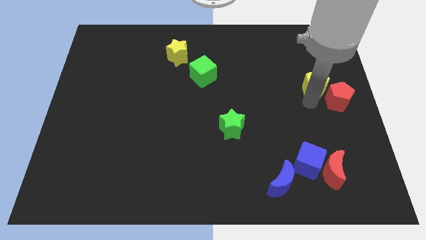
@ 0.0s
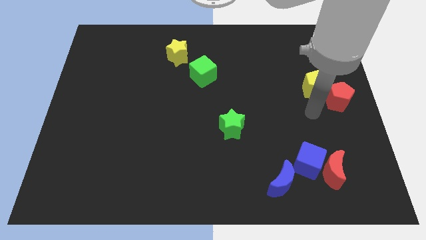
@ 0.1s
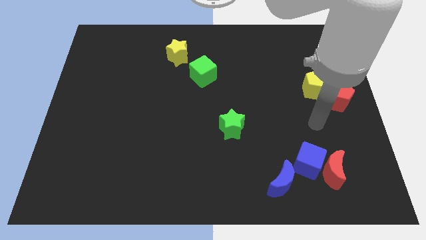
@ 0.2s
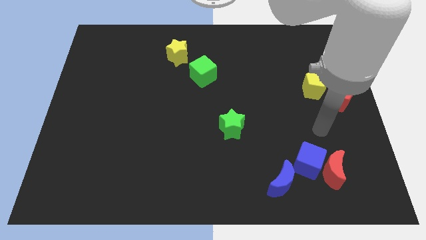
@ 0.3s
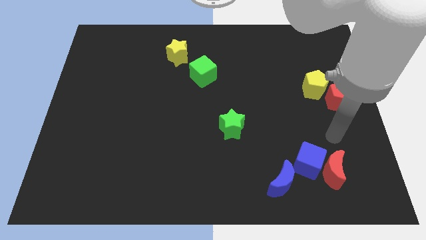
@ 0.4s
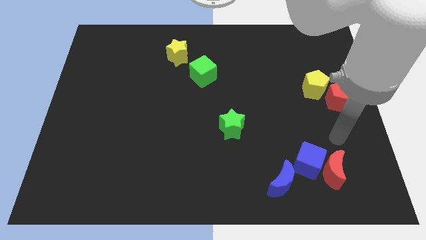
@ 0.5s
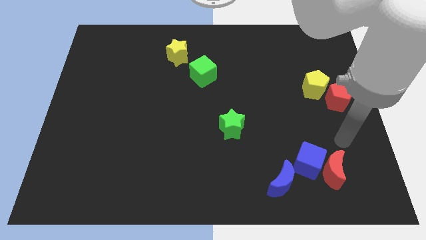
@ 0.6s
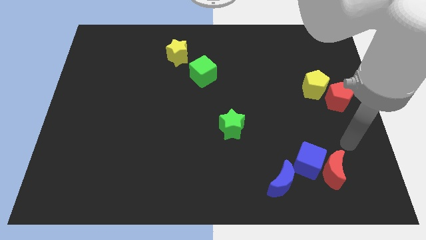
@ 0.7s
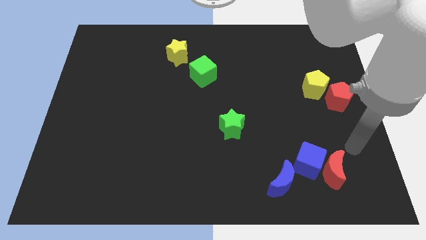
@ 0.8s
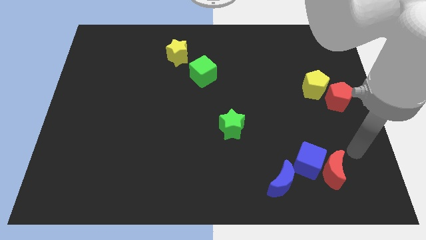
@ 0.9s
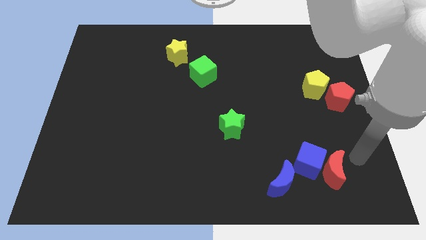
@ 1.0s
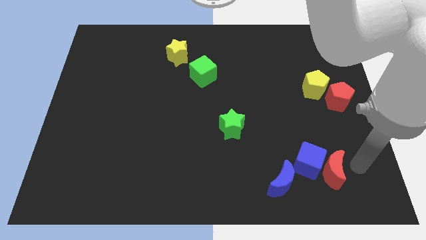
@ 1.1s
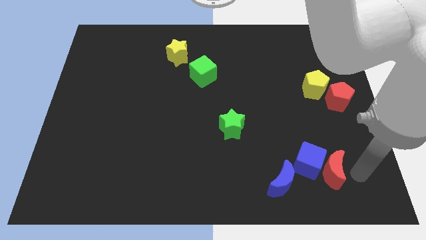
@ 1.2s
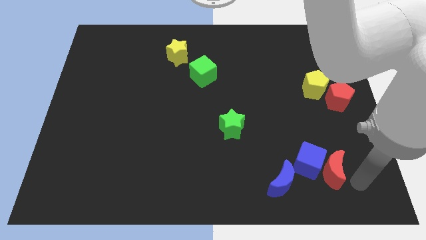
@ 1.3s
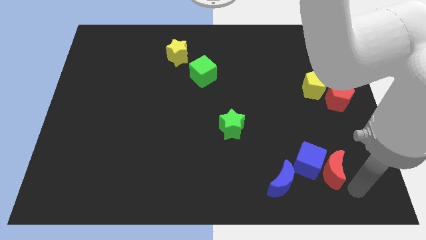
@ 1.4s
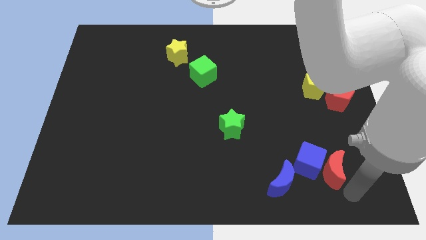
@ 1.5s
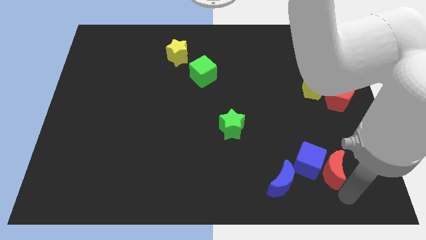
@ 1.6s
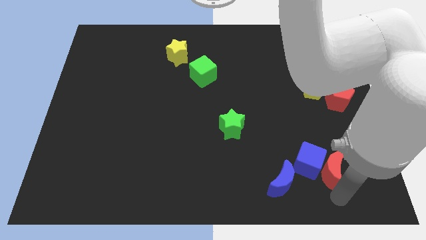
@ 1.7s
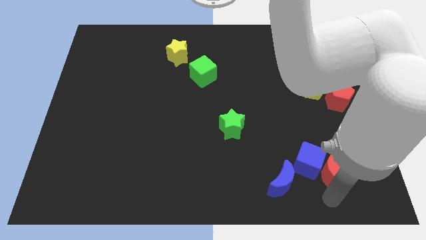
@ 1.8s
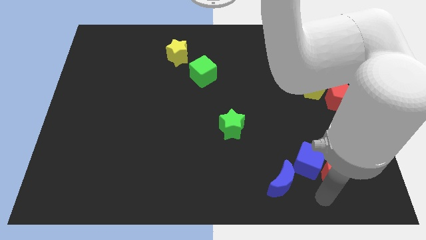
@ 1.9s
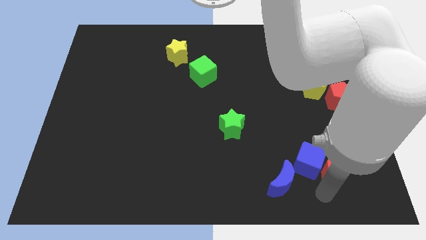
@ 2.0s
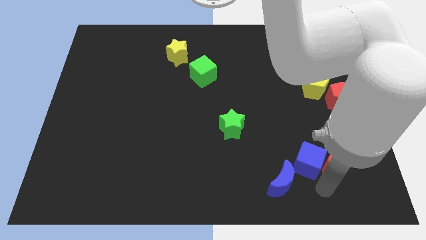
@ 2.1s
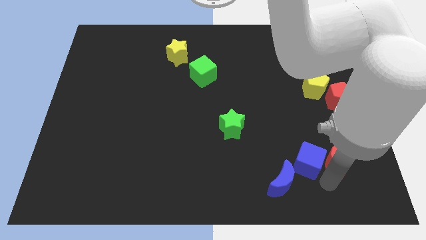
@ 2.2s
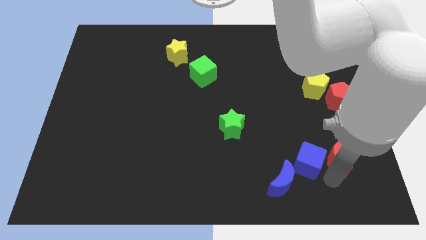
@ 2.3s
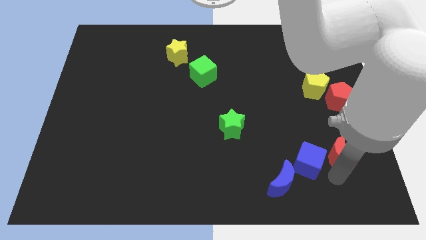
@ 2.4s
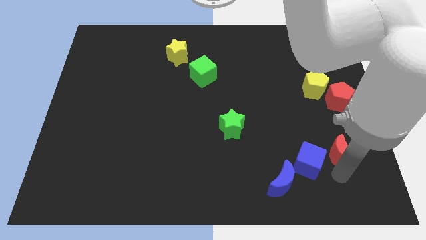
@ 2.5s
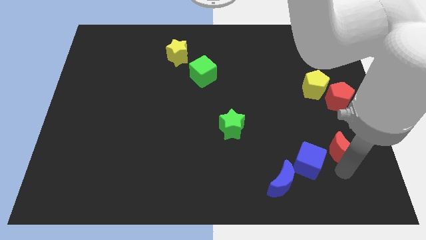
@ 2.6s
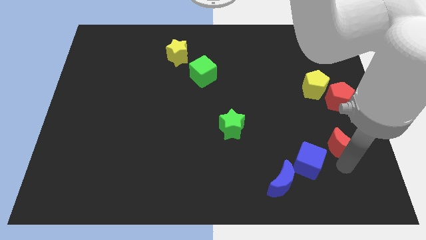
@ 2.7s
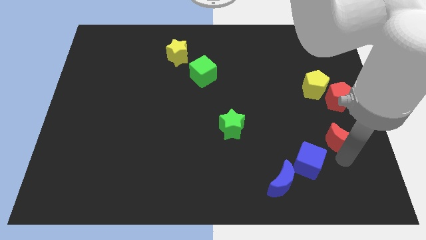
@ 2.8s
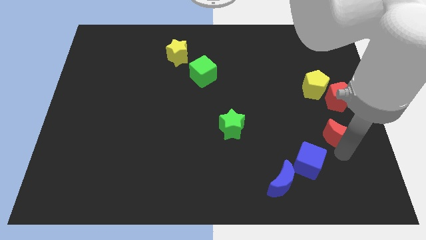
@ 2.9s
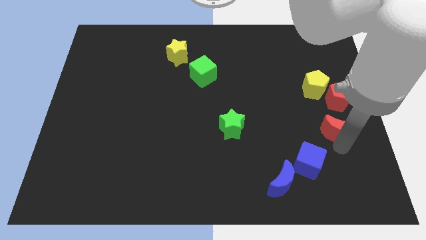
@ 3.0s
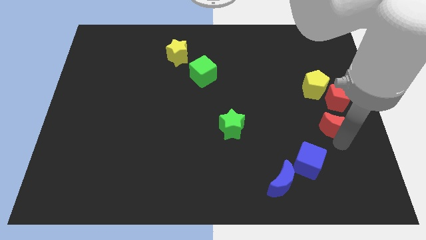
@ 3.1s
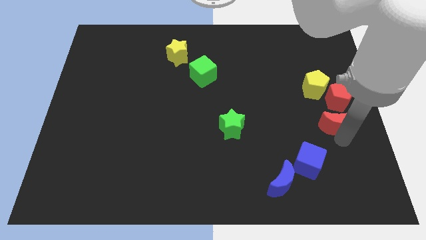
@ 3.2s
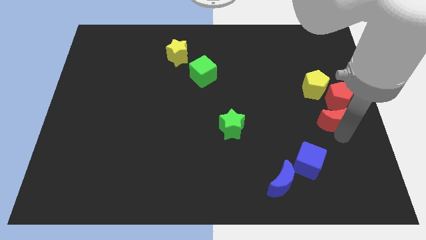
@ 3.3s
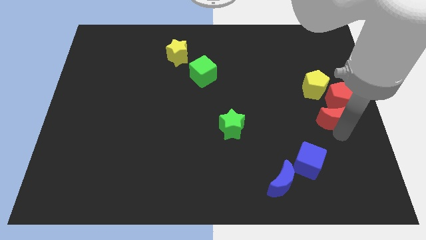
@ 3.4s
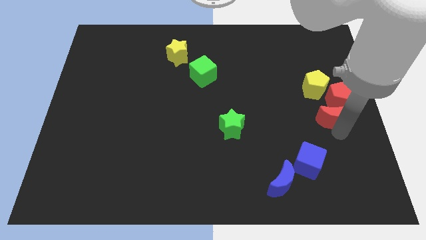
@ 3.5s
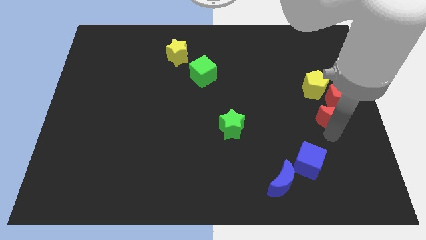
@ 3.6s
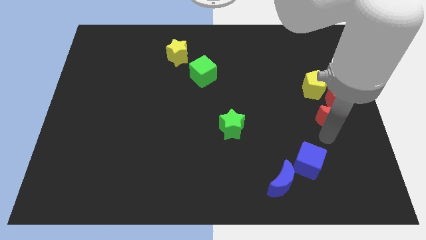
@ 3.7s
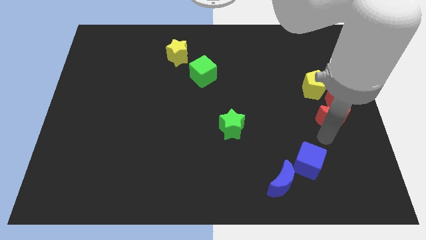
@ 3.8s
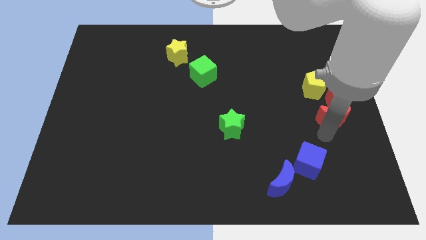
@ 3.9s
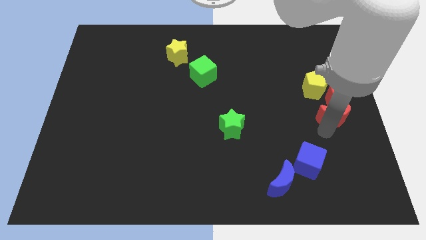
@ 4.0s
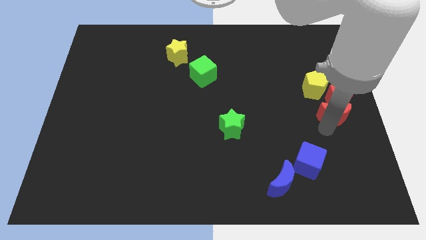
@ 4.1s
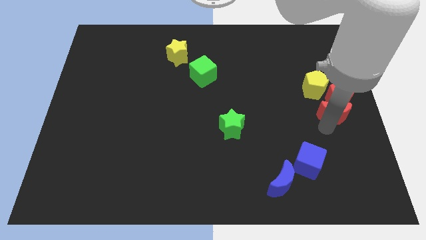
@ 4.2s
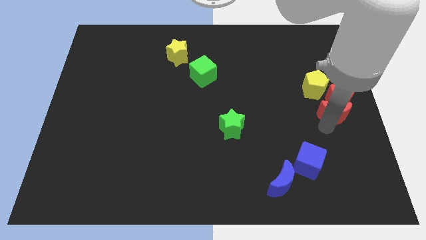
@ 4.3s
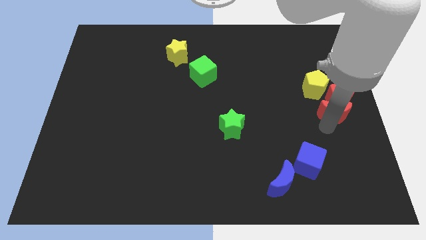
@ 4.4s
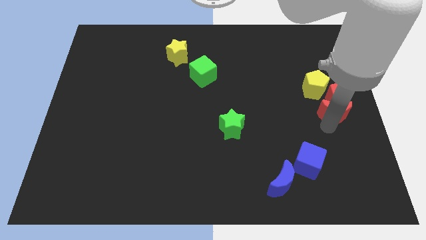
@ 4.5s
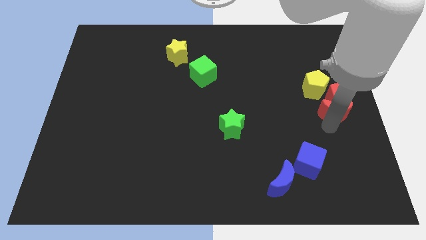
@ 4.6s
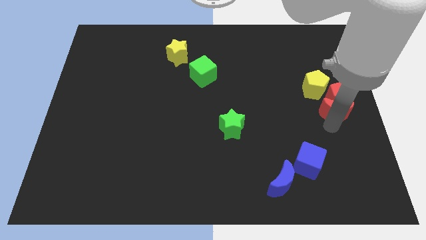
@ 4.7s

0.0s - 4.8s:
place the red moon to bottom of the red pentagon

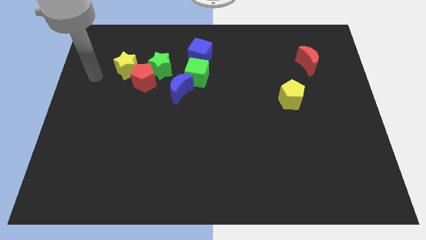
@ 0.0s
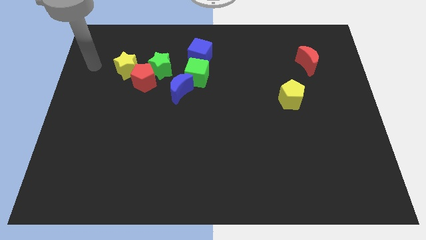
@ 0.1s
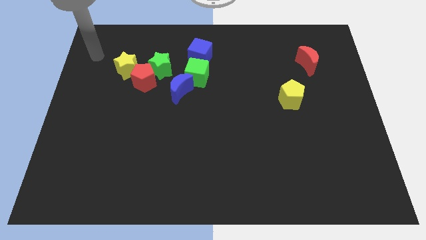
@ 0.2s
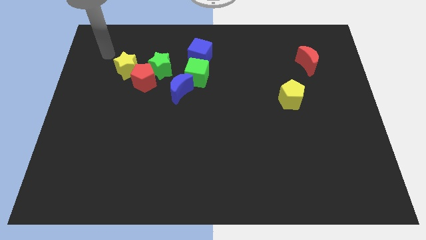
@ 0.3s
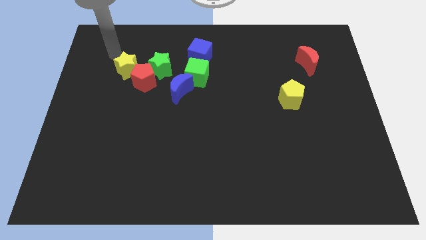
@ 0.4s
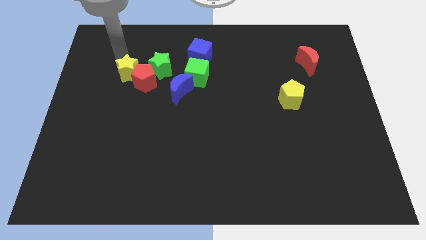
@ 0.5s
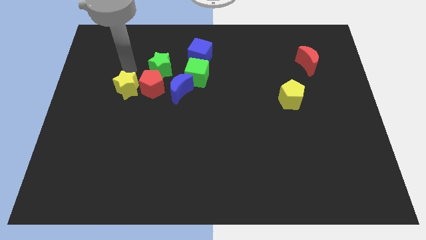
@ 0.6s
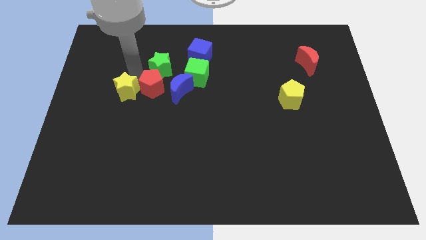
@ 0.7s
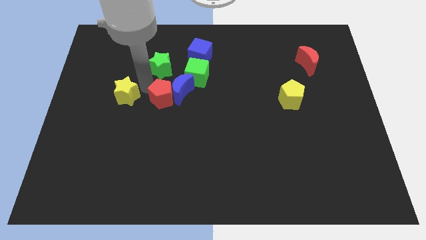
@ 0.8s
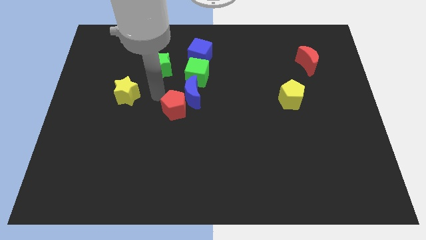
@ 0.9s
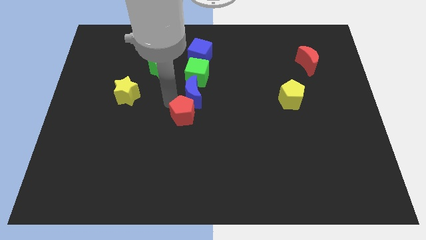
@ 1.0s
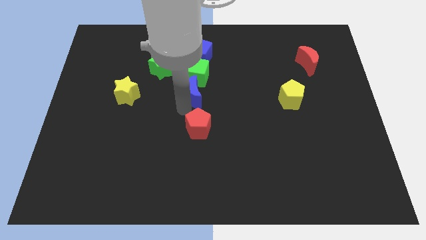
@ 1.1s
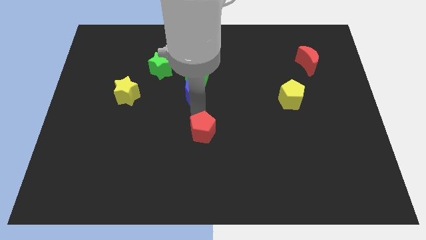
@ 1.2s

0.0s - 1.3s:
push the red pentagon away from the yellow star

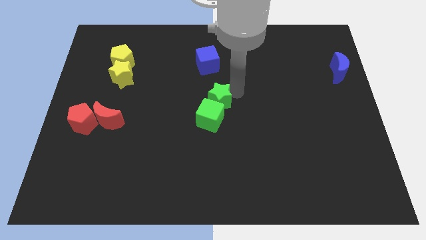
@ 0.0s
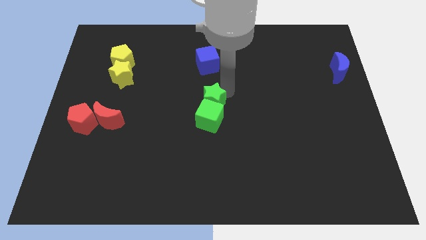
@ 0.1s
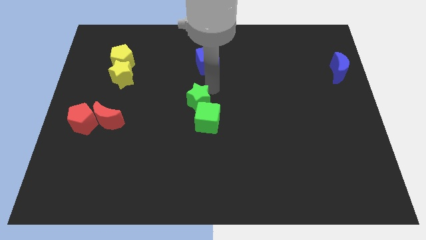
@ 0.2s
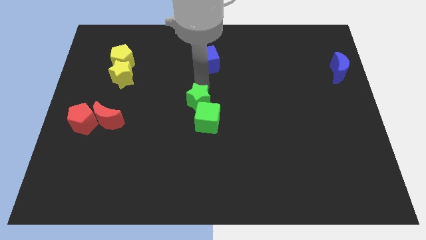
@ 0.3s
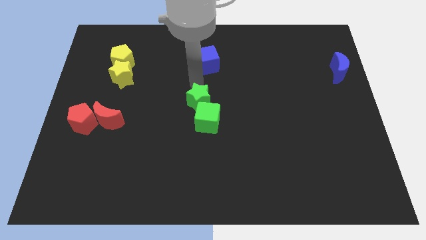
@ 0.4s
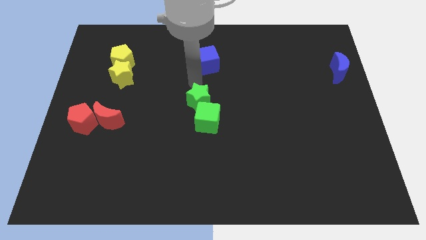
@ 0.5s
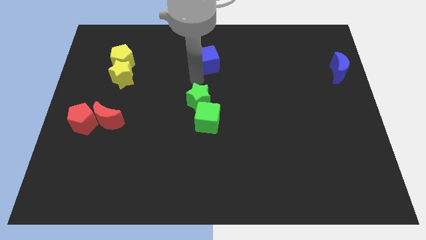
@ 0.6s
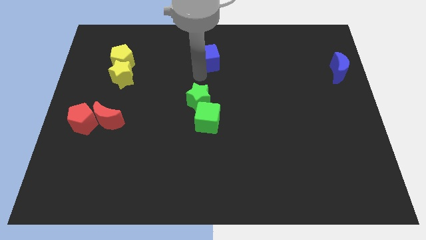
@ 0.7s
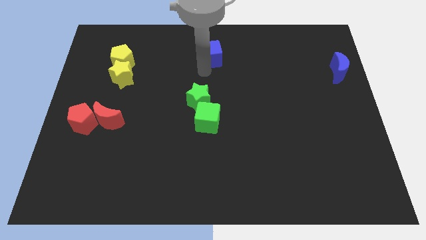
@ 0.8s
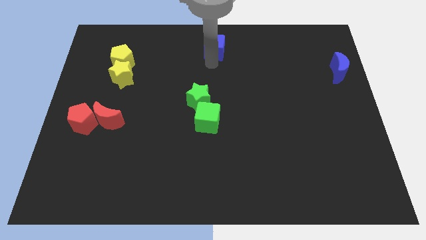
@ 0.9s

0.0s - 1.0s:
move the blue cube to the top centre of the board

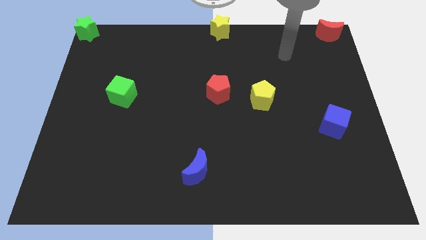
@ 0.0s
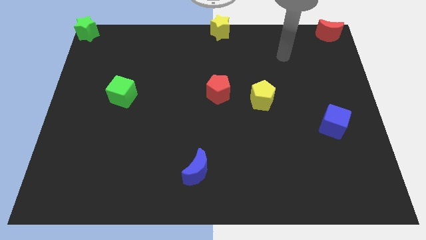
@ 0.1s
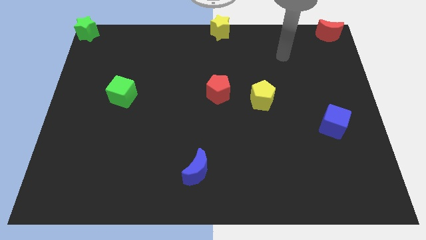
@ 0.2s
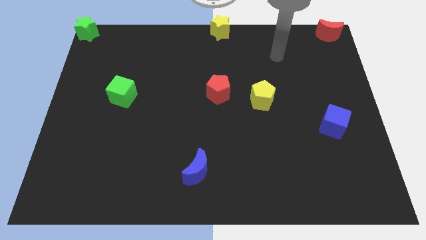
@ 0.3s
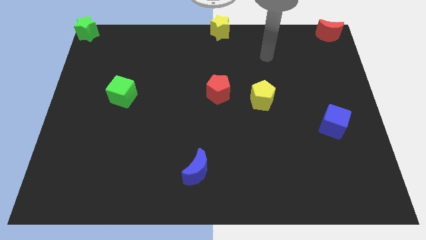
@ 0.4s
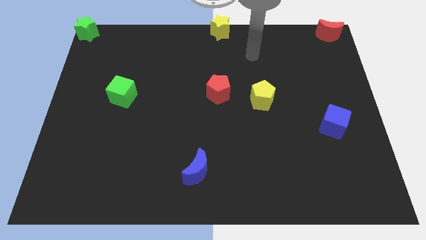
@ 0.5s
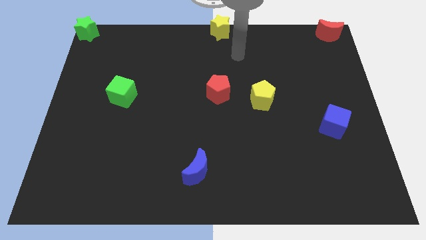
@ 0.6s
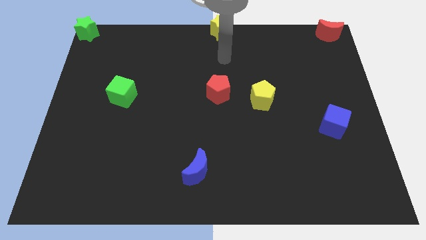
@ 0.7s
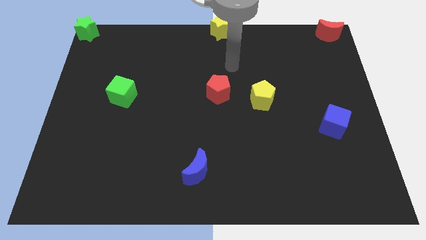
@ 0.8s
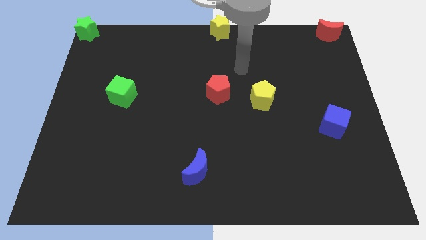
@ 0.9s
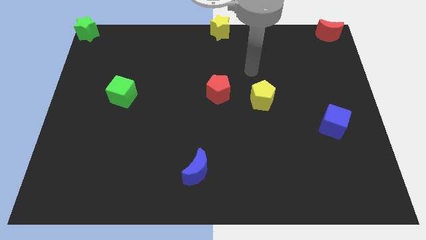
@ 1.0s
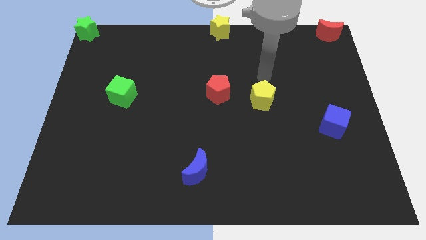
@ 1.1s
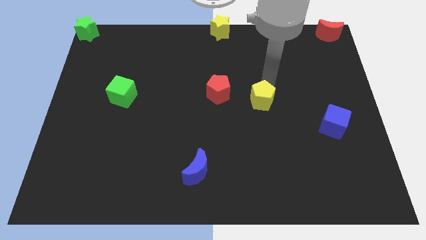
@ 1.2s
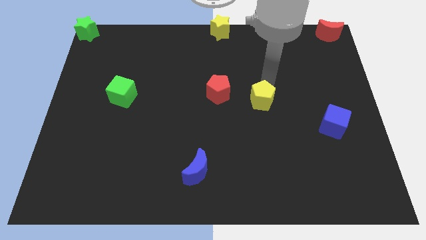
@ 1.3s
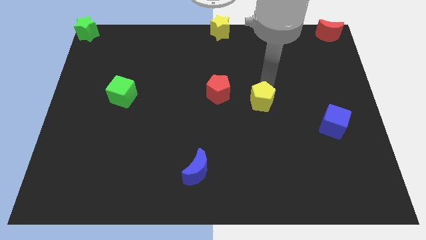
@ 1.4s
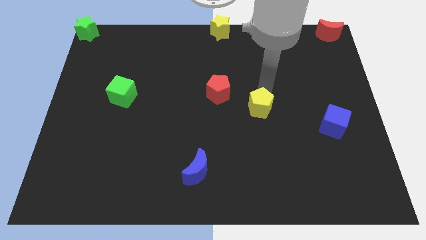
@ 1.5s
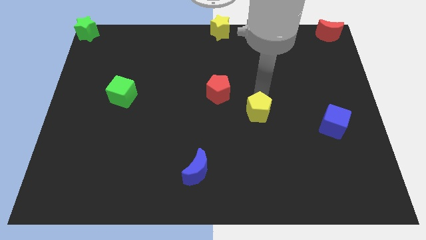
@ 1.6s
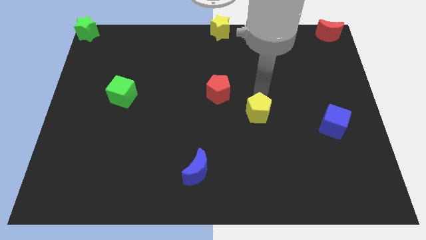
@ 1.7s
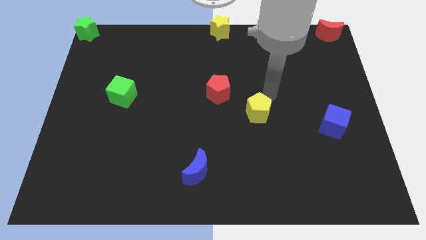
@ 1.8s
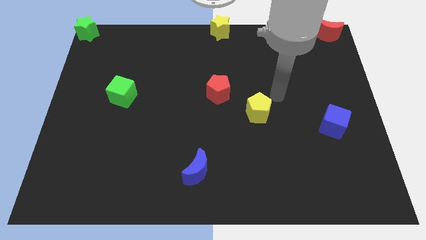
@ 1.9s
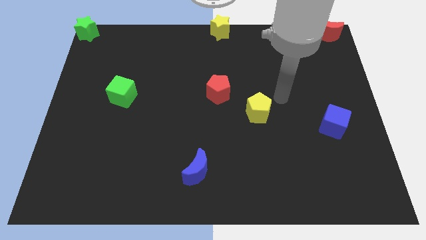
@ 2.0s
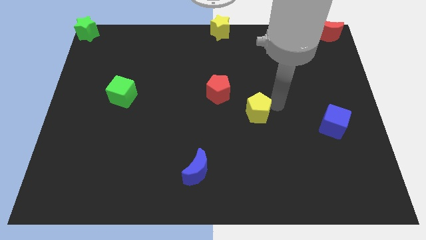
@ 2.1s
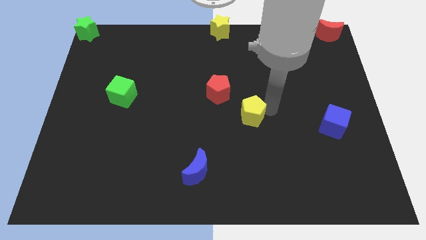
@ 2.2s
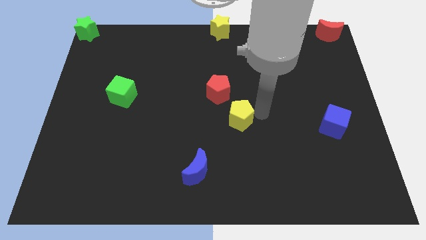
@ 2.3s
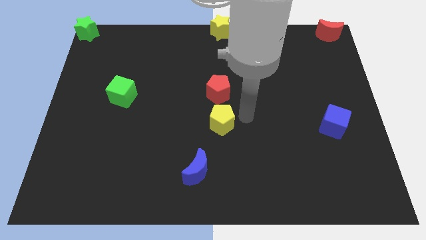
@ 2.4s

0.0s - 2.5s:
place yellow pentagon to the bottom of red pentagon
